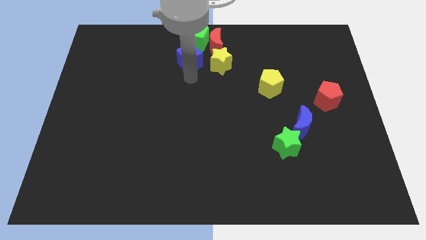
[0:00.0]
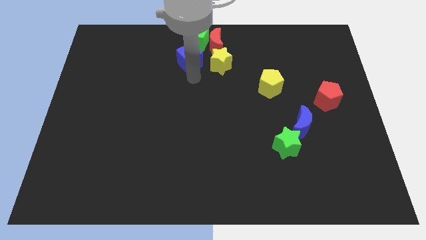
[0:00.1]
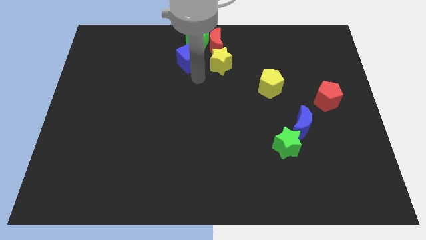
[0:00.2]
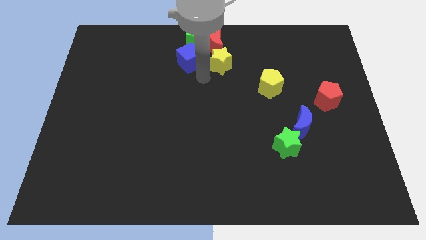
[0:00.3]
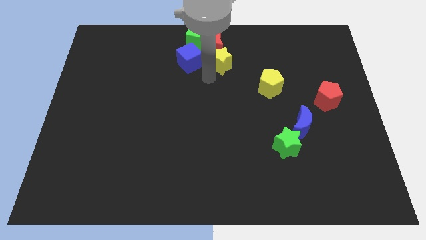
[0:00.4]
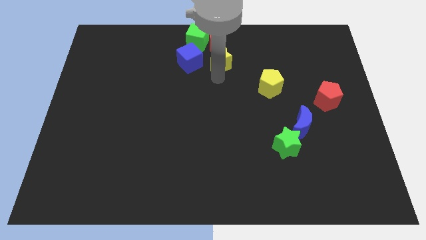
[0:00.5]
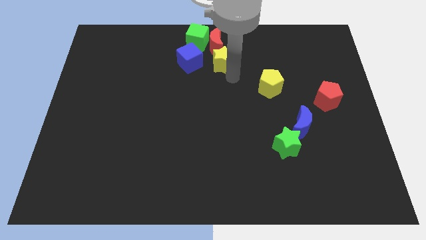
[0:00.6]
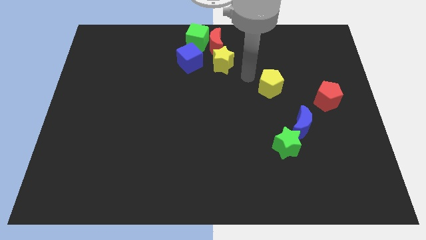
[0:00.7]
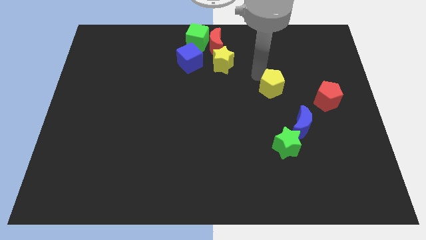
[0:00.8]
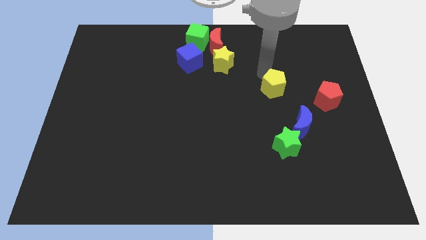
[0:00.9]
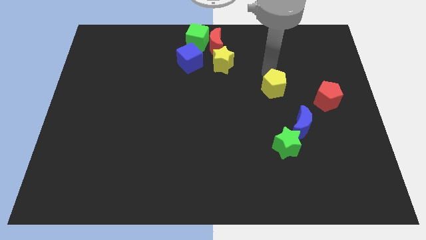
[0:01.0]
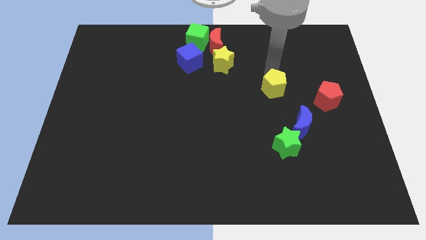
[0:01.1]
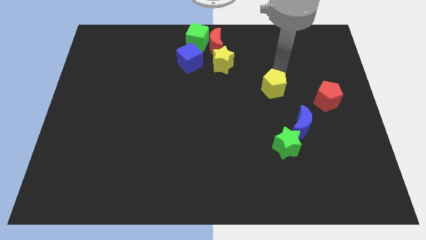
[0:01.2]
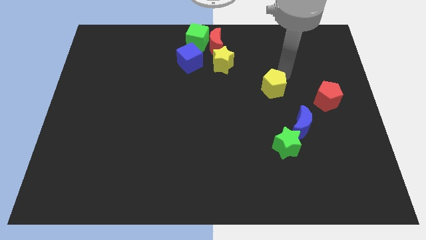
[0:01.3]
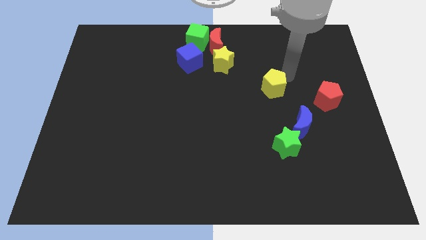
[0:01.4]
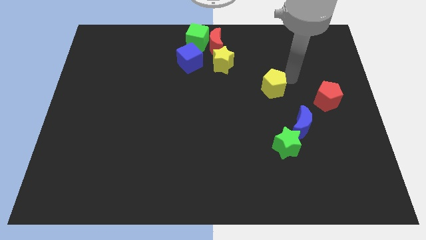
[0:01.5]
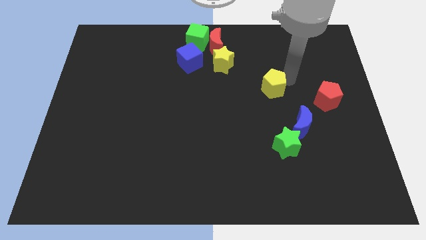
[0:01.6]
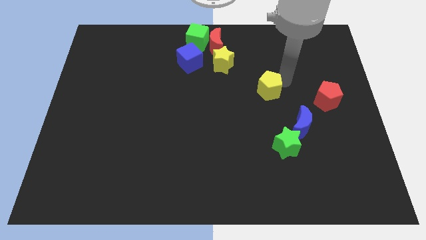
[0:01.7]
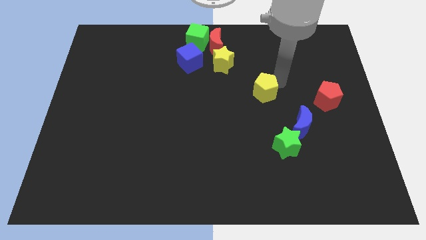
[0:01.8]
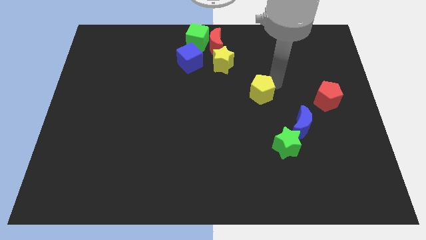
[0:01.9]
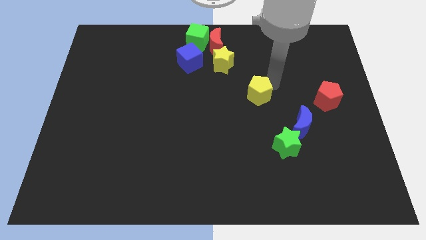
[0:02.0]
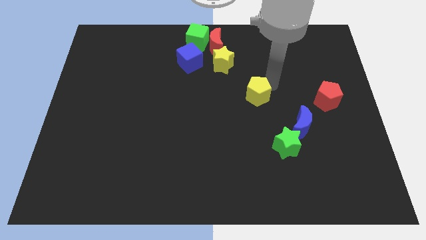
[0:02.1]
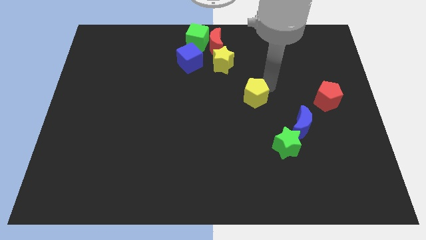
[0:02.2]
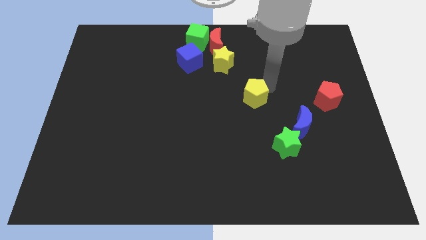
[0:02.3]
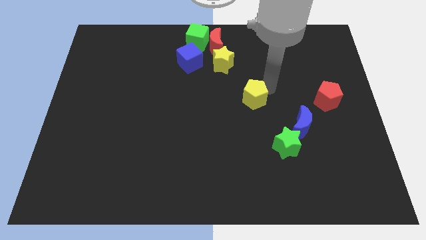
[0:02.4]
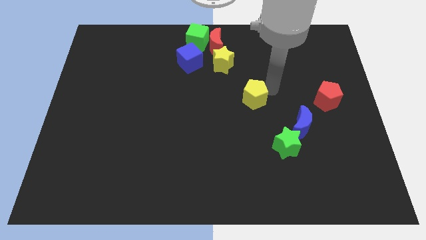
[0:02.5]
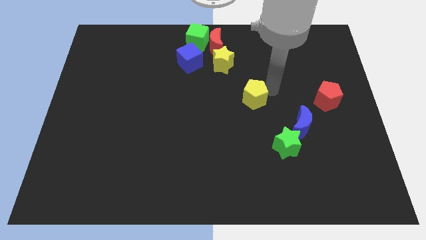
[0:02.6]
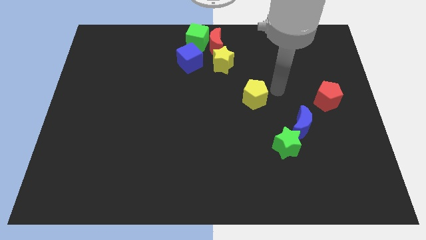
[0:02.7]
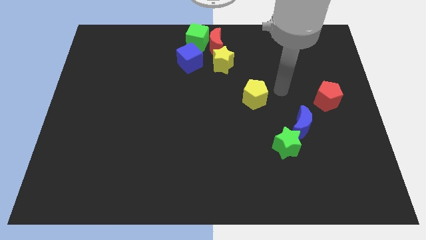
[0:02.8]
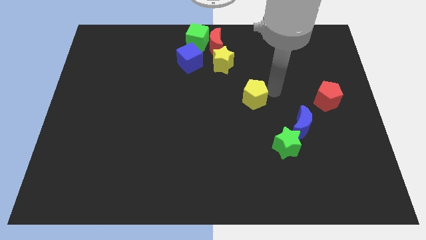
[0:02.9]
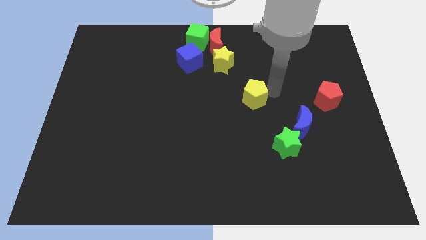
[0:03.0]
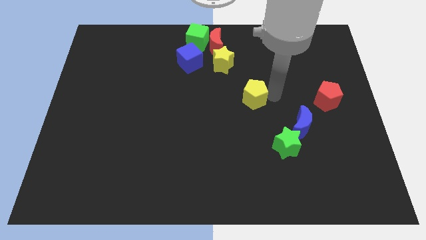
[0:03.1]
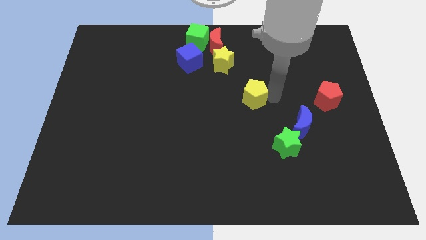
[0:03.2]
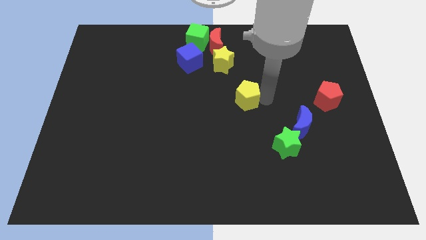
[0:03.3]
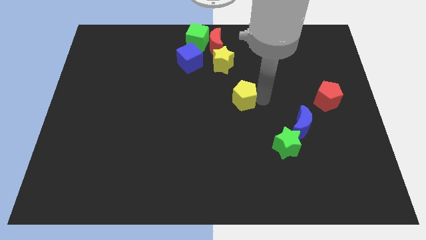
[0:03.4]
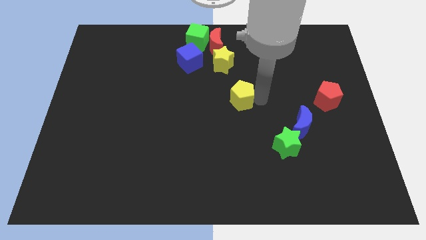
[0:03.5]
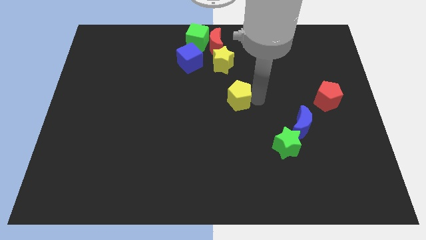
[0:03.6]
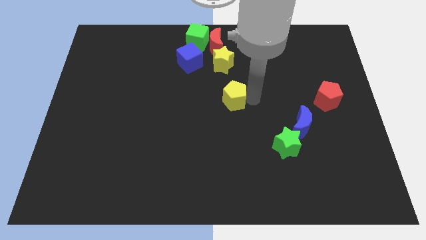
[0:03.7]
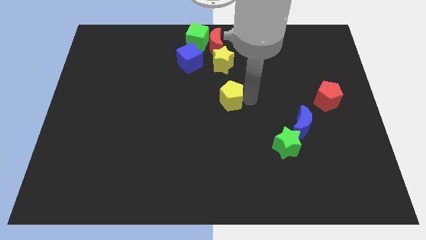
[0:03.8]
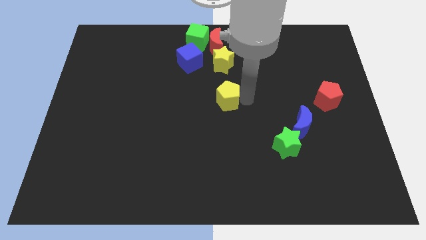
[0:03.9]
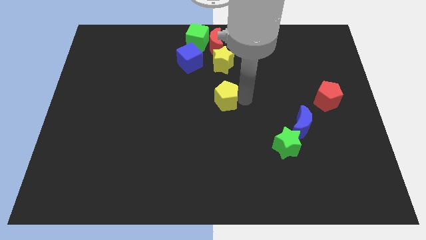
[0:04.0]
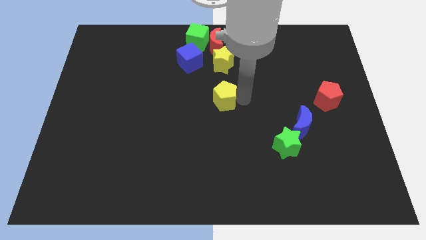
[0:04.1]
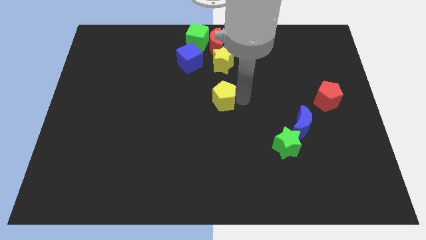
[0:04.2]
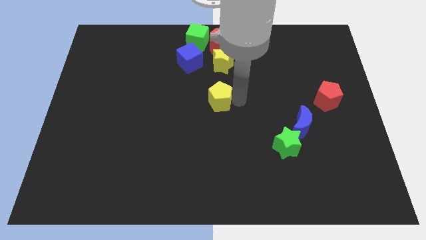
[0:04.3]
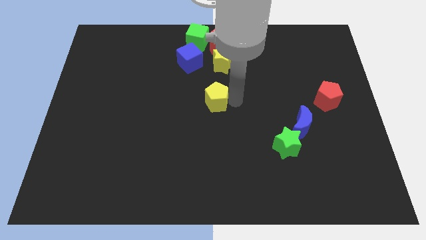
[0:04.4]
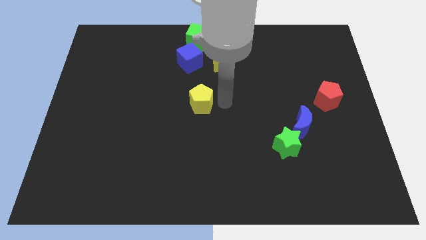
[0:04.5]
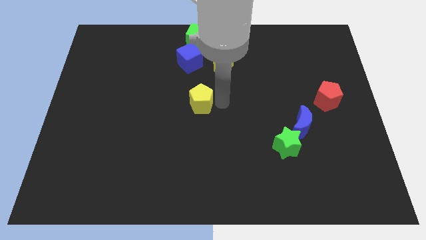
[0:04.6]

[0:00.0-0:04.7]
put the yellow pentagon at the center of the board

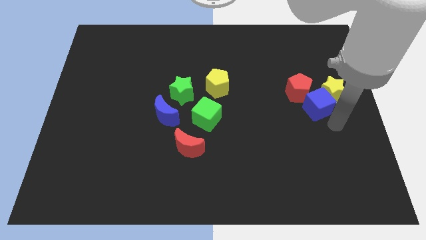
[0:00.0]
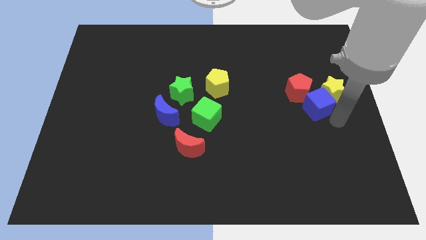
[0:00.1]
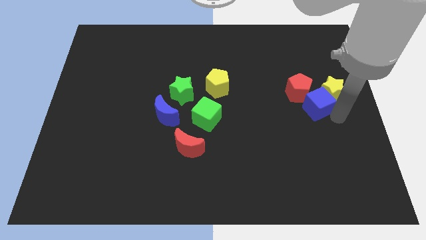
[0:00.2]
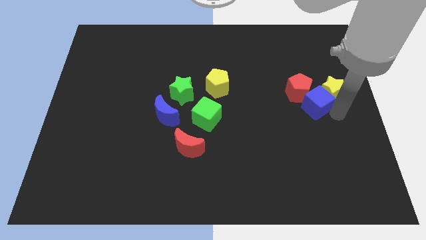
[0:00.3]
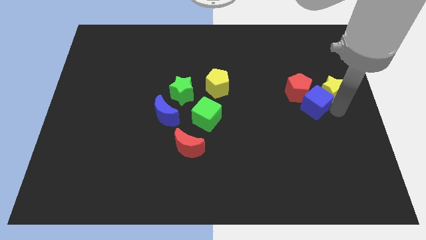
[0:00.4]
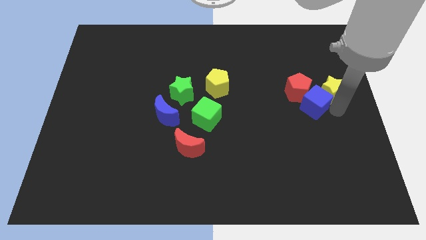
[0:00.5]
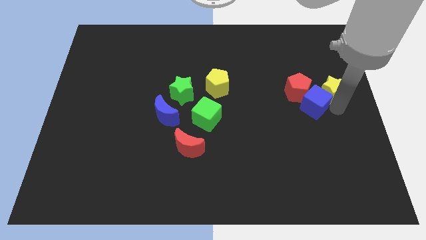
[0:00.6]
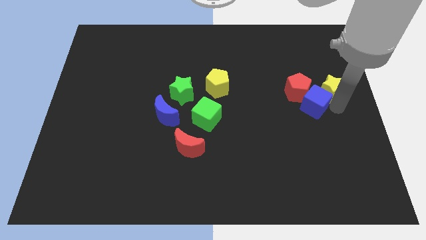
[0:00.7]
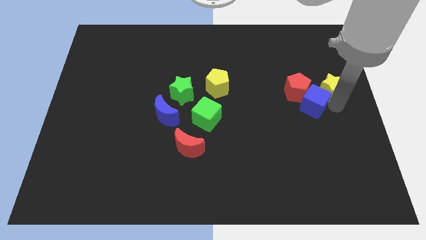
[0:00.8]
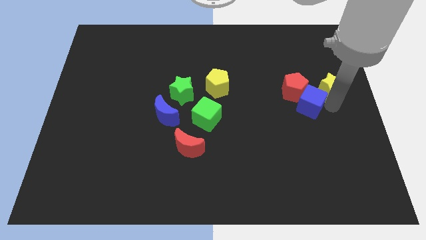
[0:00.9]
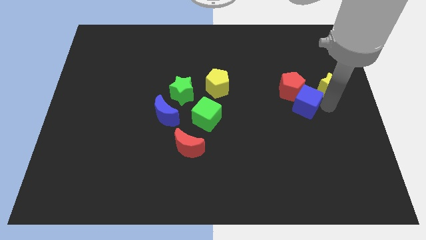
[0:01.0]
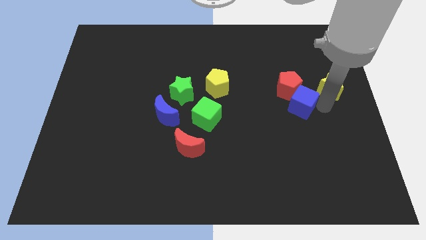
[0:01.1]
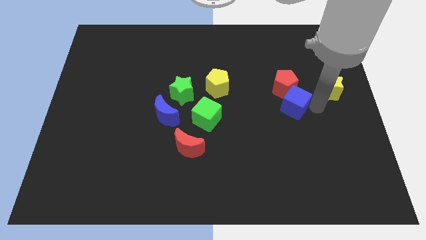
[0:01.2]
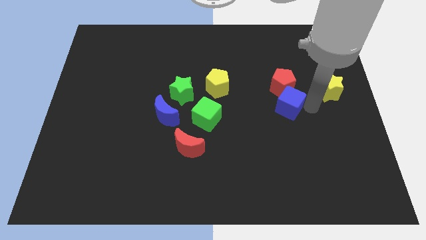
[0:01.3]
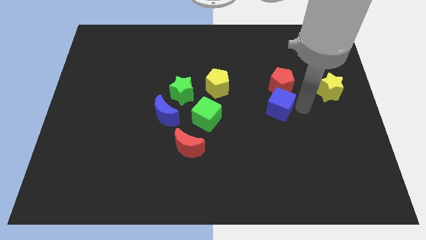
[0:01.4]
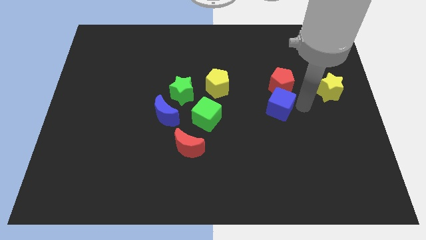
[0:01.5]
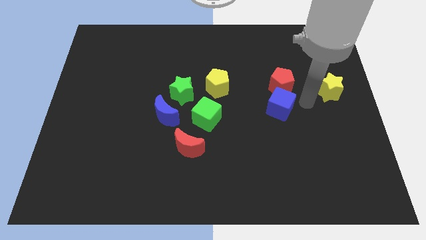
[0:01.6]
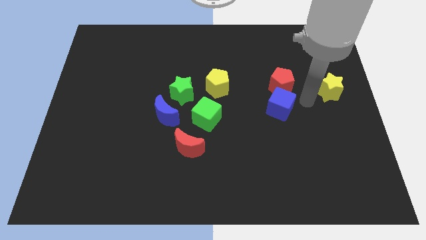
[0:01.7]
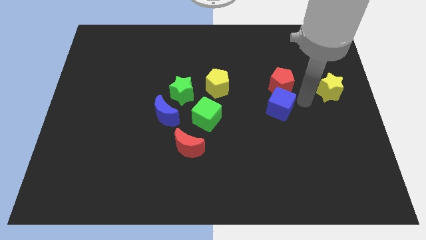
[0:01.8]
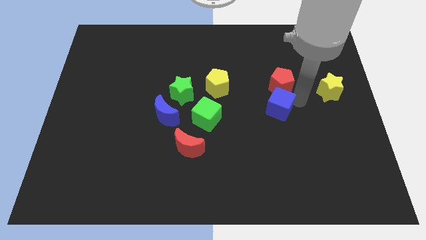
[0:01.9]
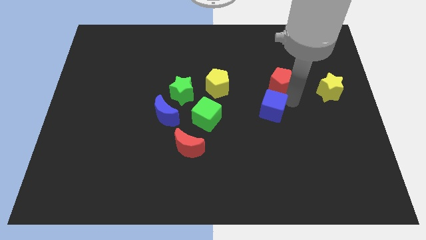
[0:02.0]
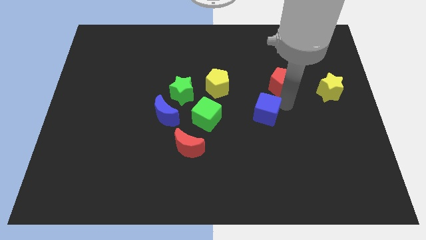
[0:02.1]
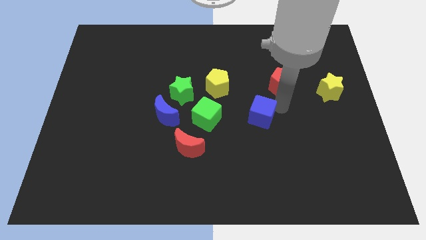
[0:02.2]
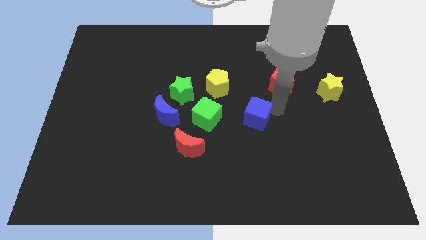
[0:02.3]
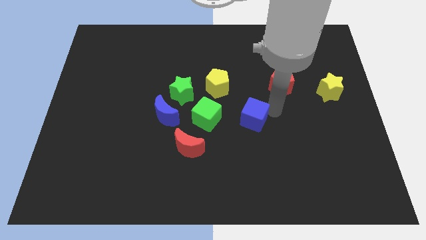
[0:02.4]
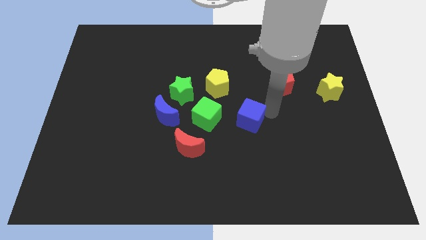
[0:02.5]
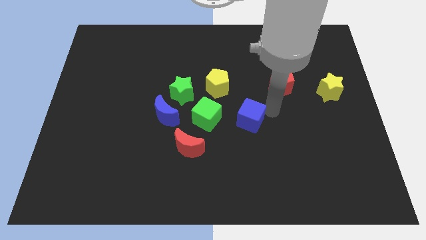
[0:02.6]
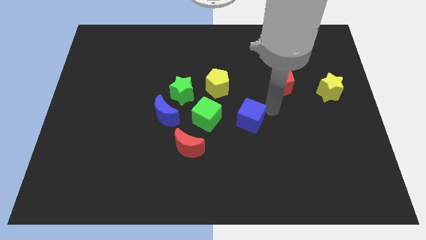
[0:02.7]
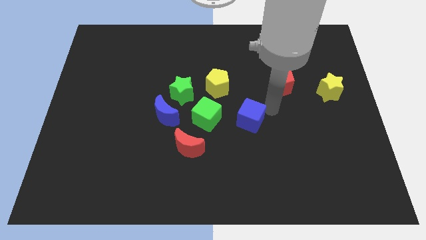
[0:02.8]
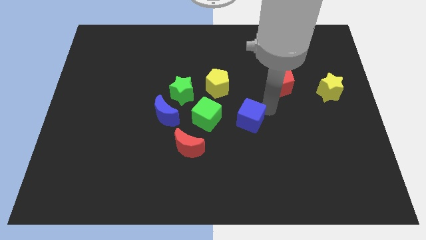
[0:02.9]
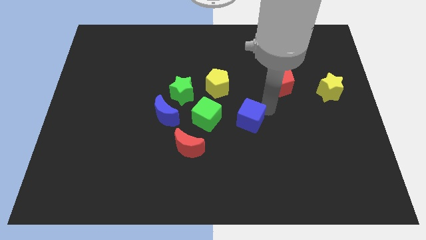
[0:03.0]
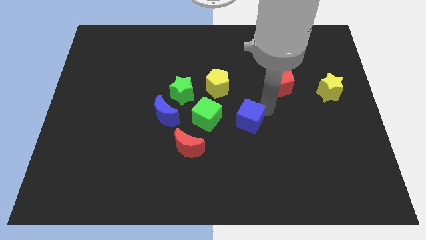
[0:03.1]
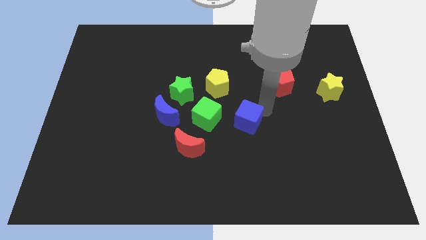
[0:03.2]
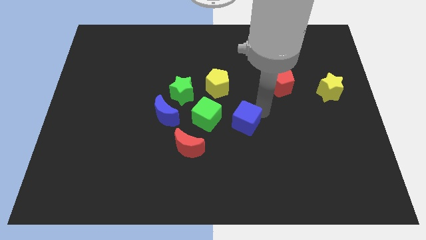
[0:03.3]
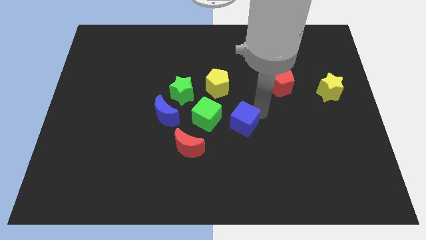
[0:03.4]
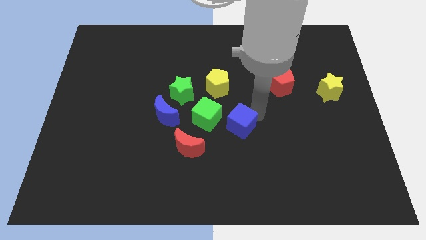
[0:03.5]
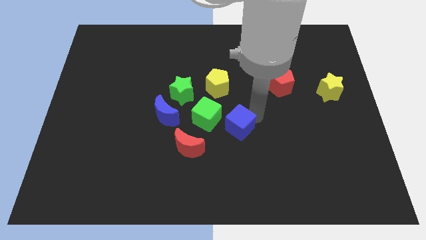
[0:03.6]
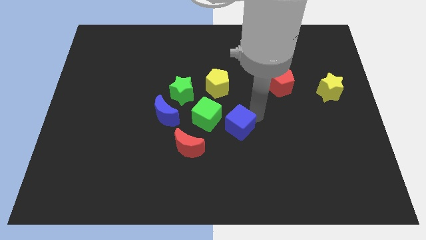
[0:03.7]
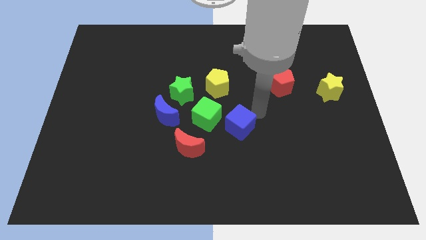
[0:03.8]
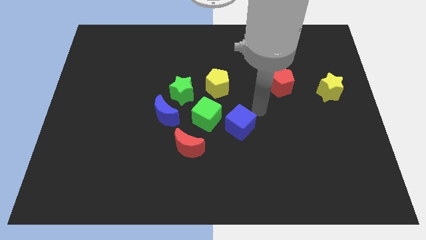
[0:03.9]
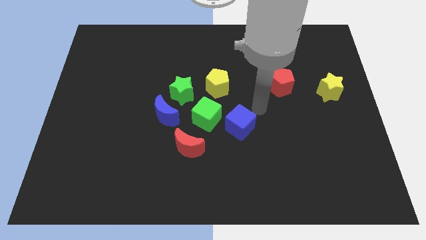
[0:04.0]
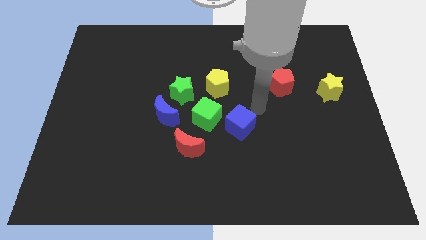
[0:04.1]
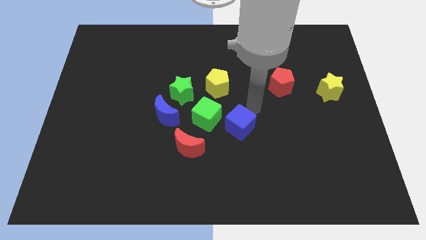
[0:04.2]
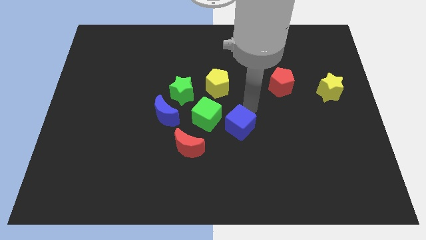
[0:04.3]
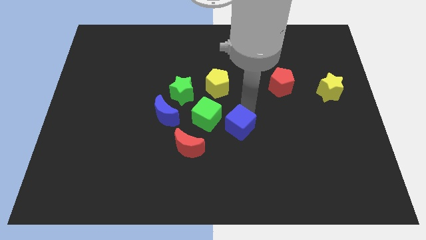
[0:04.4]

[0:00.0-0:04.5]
push the blue cube to the right of the green cube
